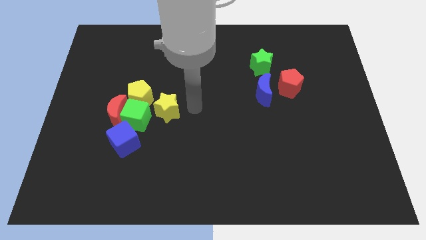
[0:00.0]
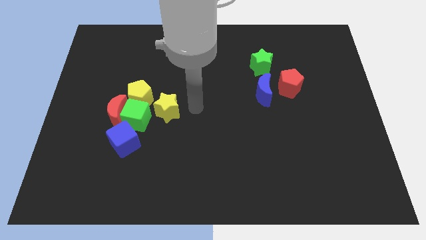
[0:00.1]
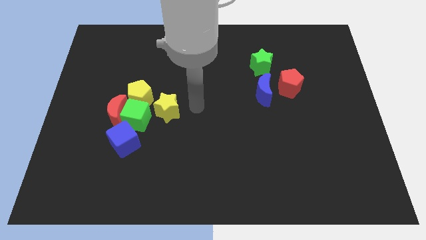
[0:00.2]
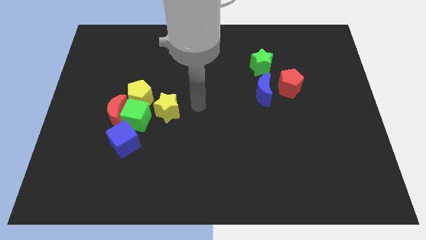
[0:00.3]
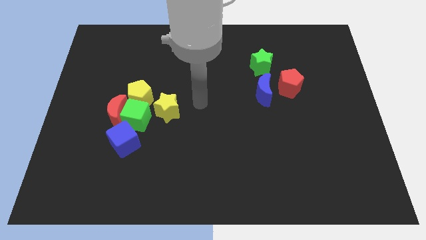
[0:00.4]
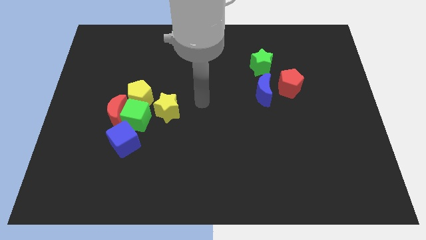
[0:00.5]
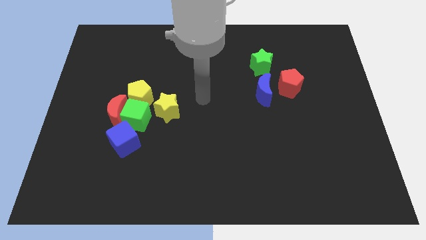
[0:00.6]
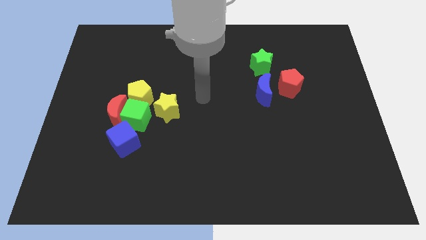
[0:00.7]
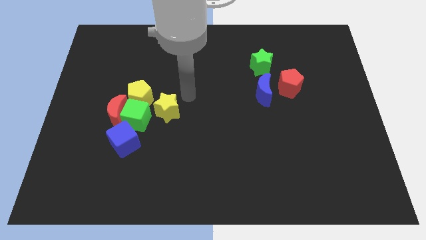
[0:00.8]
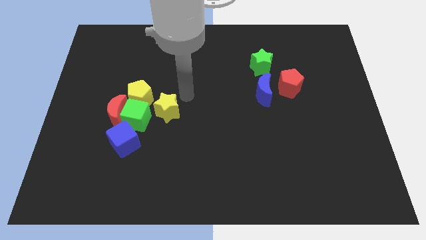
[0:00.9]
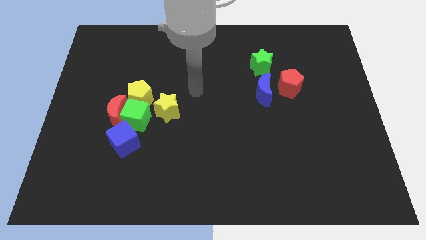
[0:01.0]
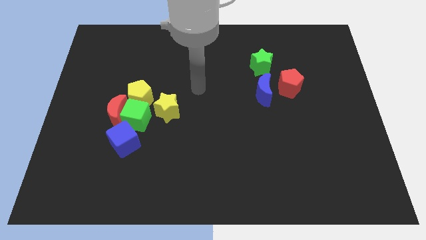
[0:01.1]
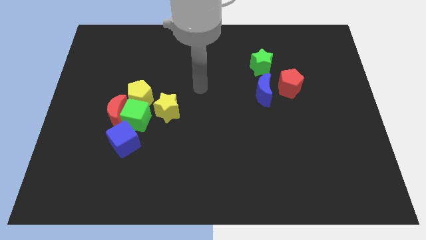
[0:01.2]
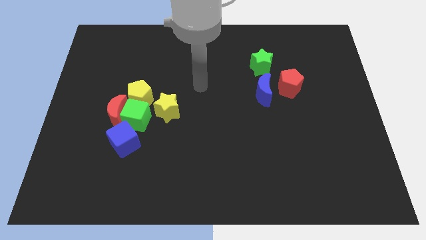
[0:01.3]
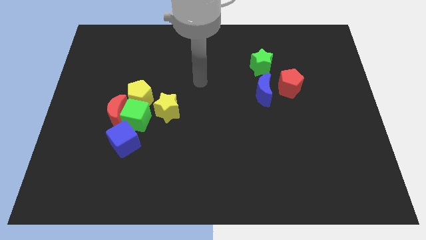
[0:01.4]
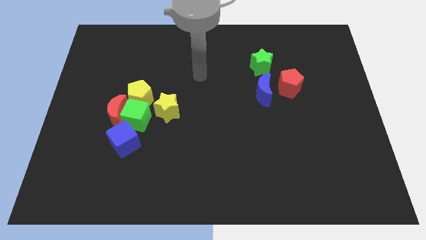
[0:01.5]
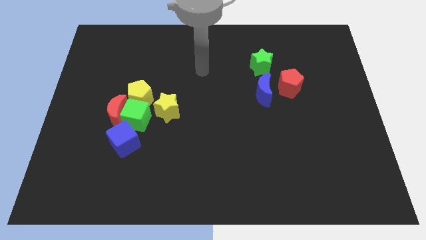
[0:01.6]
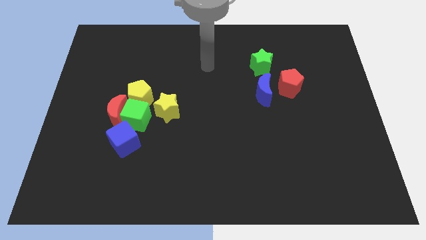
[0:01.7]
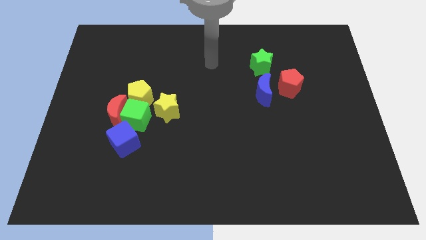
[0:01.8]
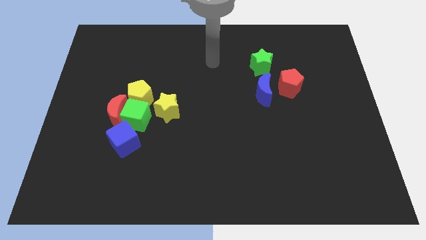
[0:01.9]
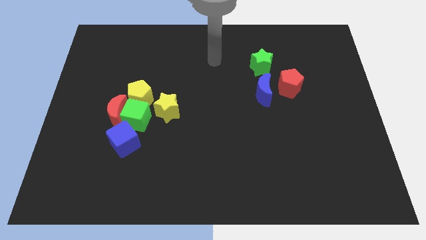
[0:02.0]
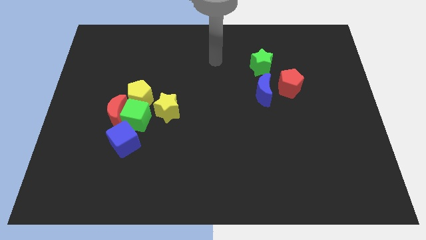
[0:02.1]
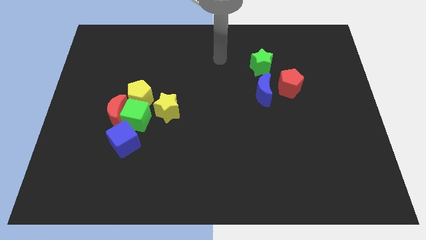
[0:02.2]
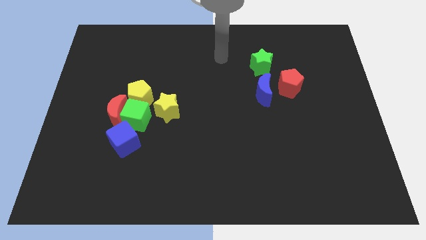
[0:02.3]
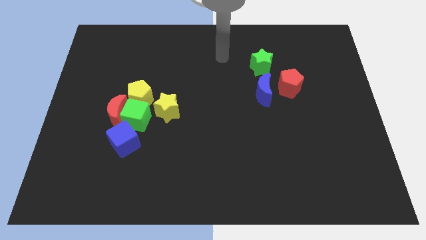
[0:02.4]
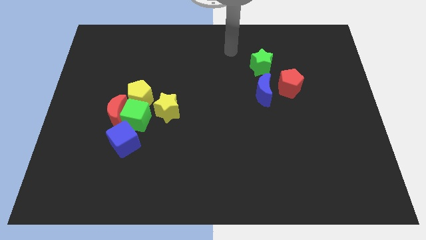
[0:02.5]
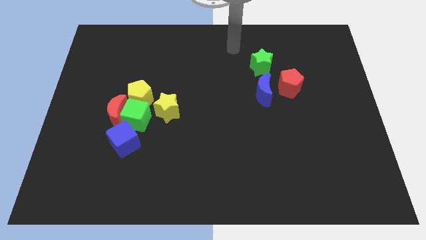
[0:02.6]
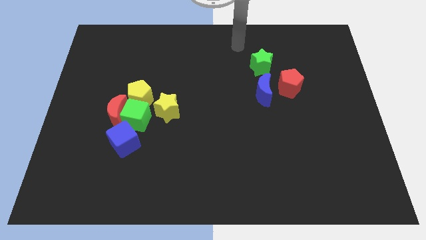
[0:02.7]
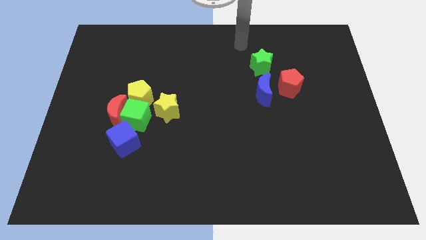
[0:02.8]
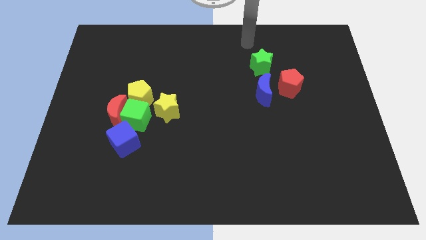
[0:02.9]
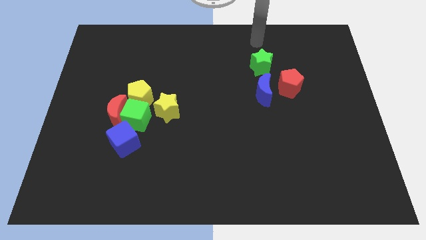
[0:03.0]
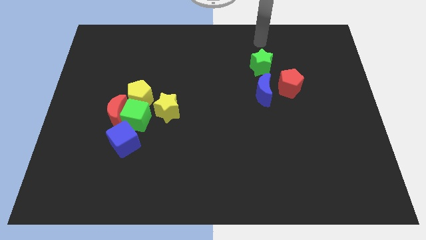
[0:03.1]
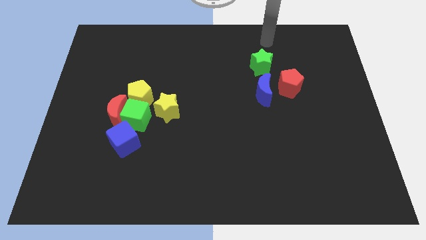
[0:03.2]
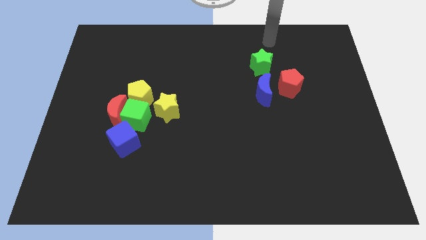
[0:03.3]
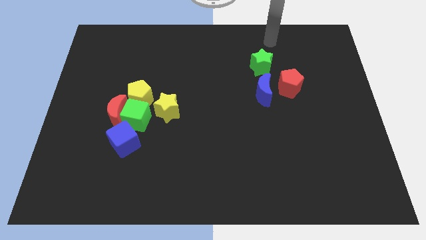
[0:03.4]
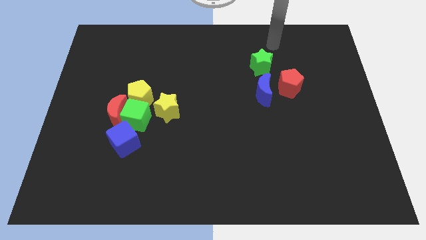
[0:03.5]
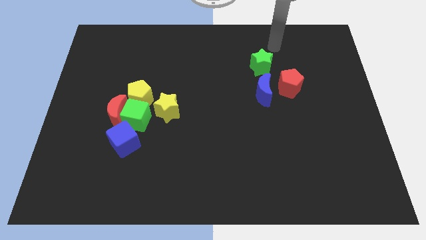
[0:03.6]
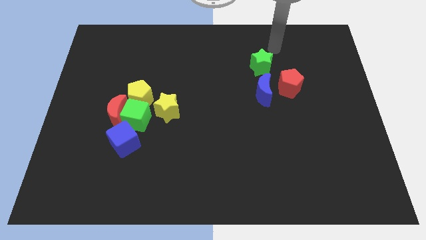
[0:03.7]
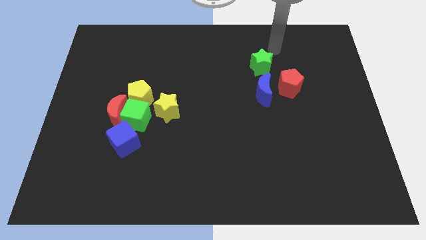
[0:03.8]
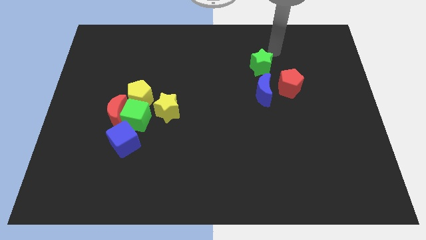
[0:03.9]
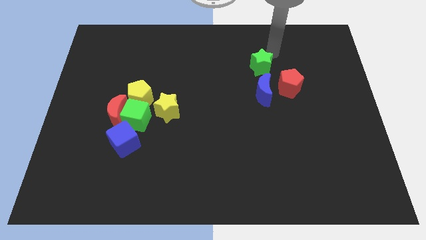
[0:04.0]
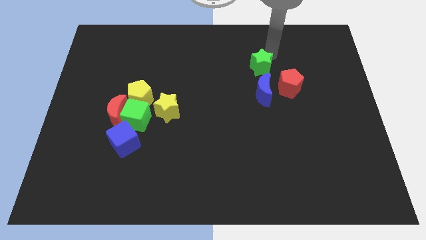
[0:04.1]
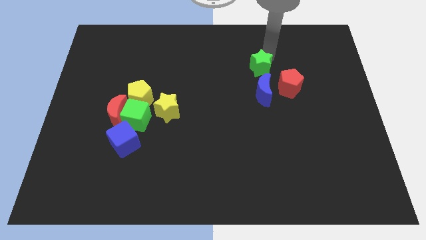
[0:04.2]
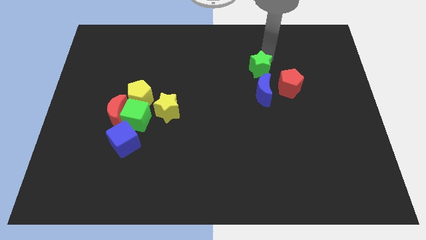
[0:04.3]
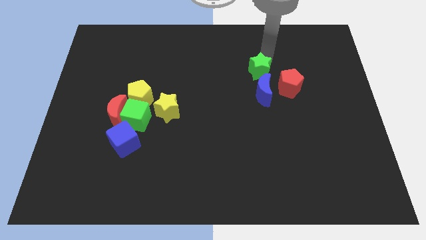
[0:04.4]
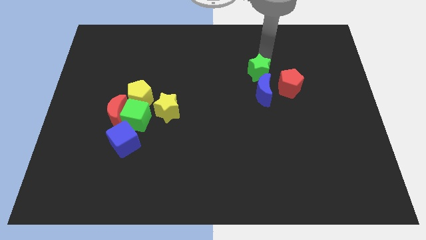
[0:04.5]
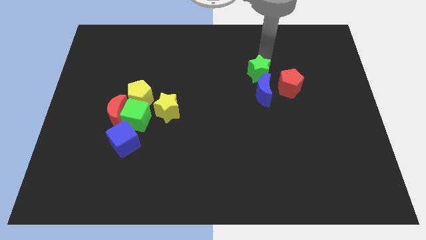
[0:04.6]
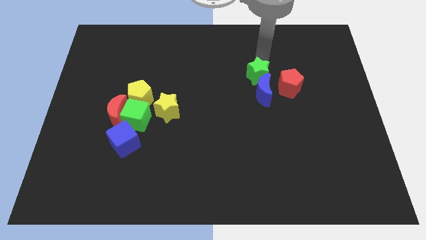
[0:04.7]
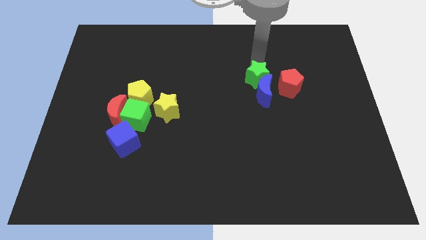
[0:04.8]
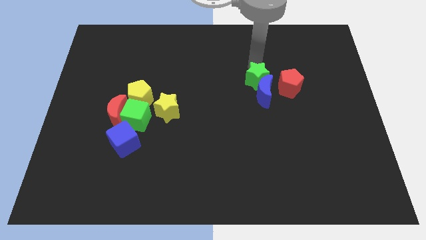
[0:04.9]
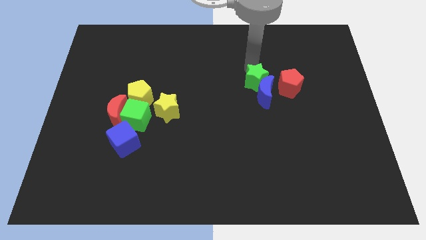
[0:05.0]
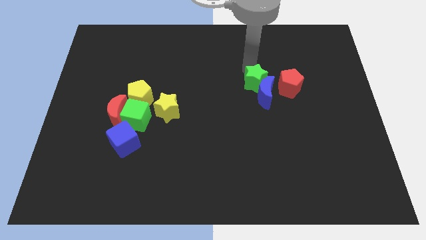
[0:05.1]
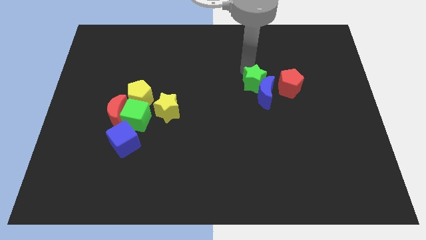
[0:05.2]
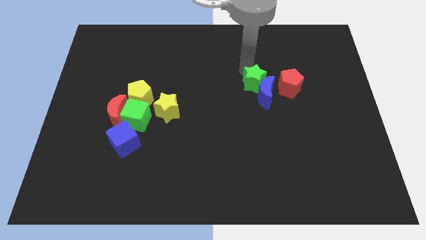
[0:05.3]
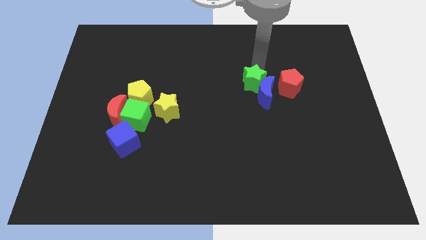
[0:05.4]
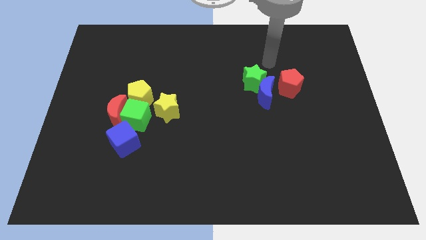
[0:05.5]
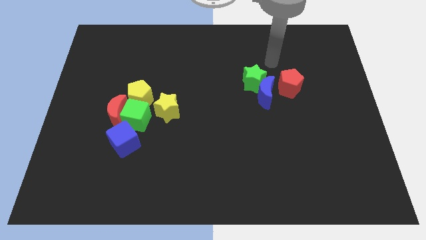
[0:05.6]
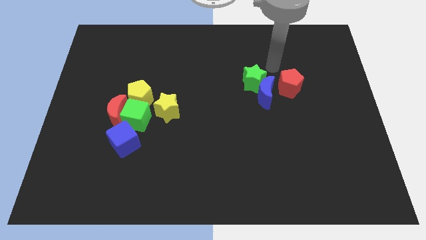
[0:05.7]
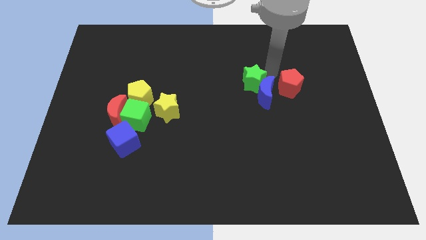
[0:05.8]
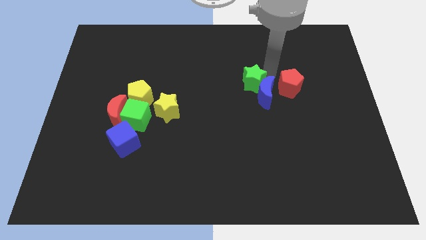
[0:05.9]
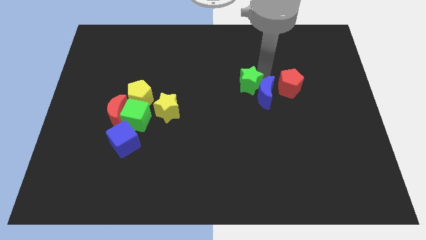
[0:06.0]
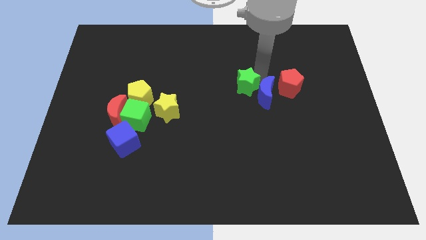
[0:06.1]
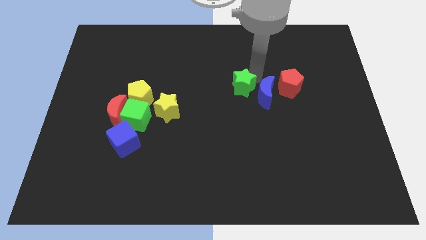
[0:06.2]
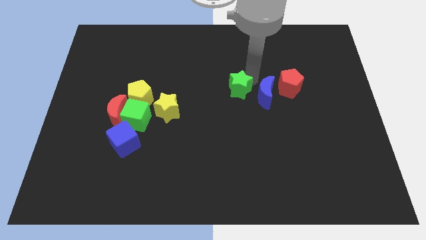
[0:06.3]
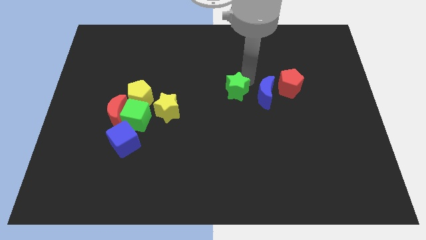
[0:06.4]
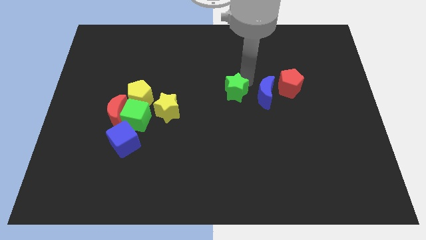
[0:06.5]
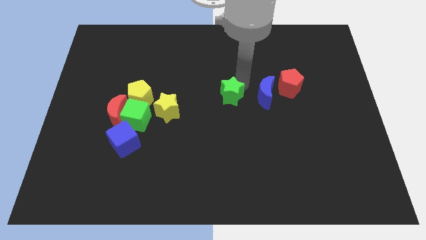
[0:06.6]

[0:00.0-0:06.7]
push the green star to the left of the blue crescent

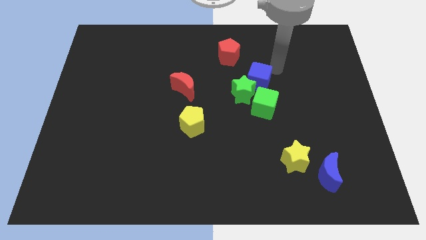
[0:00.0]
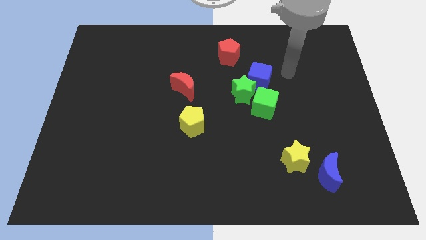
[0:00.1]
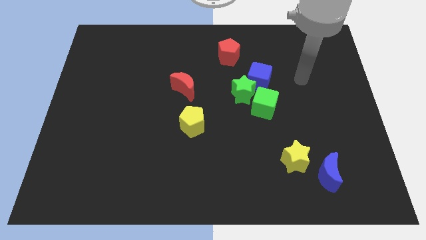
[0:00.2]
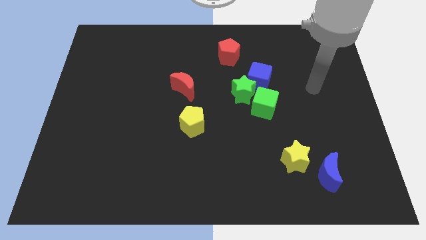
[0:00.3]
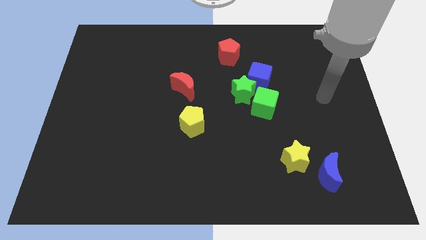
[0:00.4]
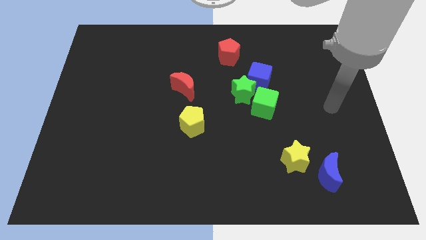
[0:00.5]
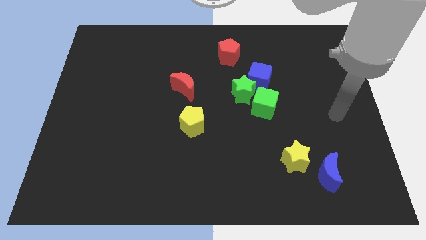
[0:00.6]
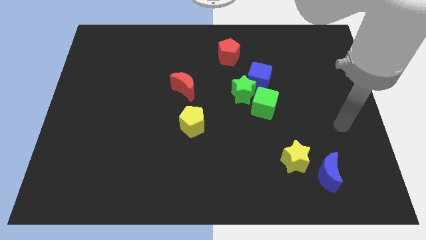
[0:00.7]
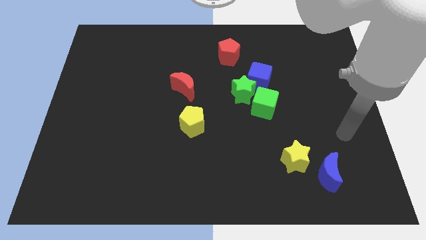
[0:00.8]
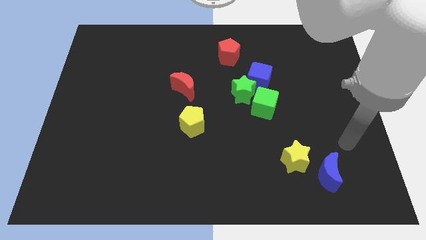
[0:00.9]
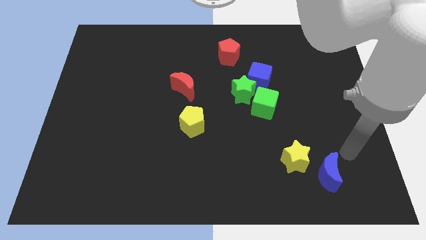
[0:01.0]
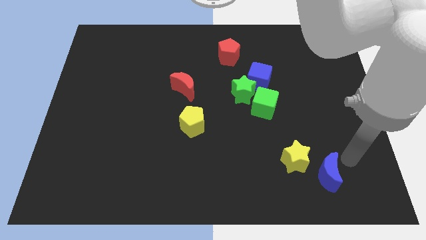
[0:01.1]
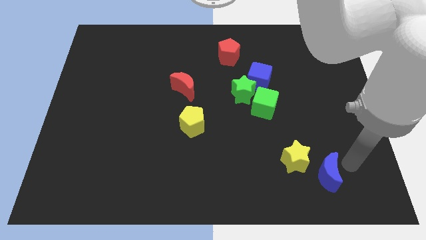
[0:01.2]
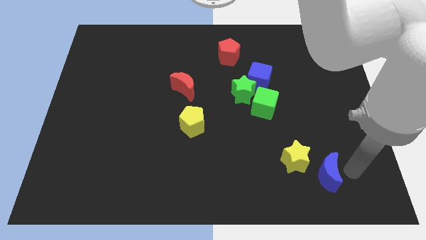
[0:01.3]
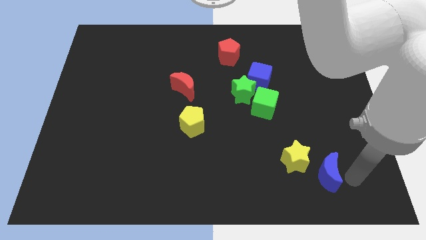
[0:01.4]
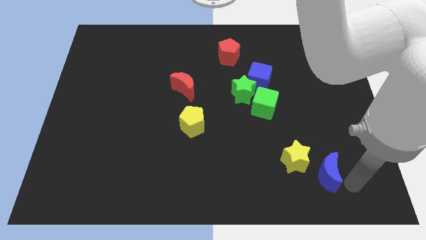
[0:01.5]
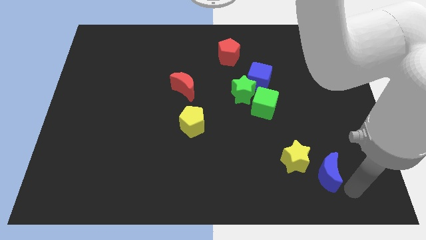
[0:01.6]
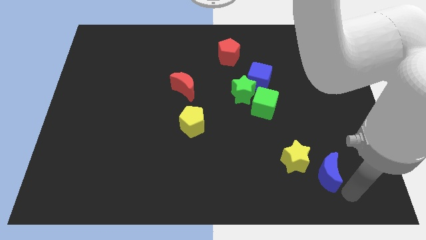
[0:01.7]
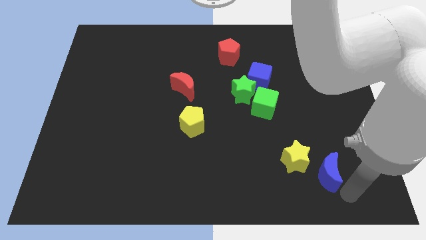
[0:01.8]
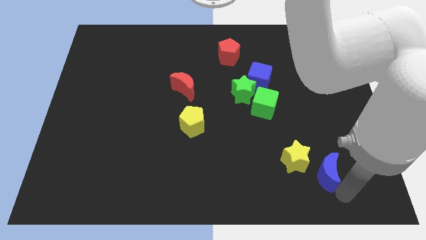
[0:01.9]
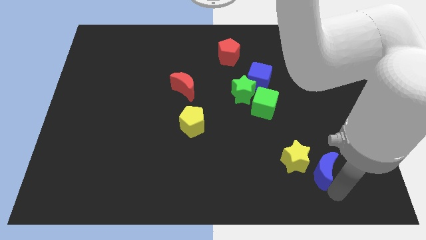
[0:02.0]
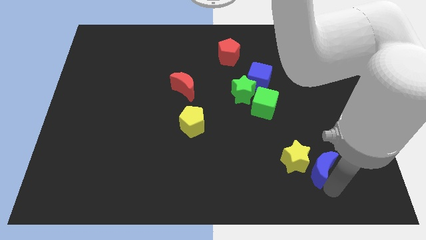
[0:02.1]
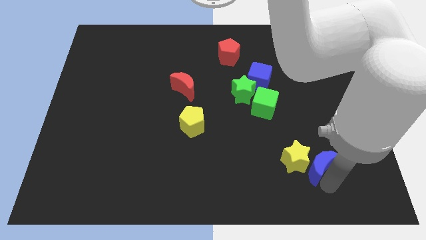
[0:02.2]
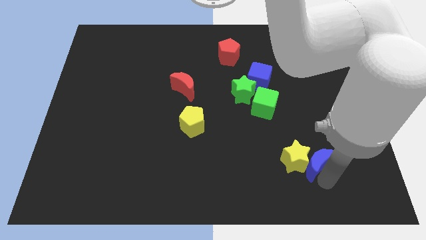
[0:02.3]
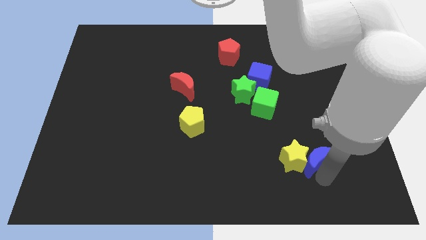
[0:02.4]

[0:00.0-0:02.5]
move the blue crescent into the right side of the yellow star
